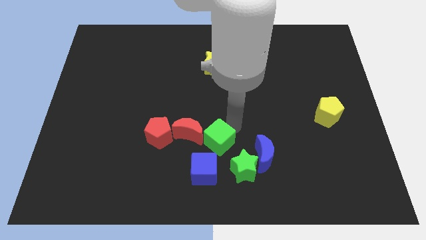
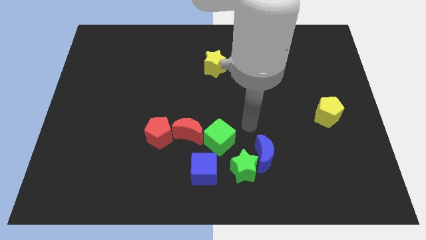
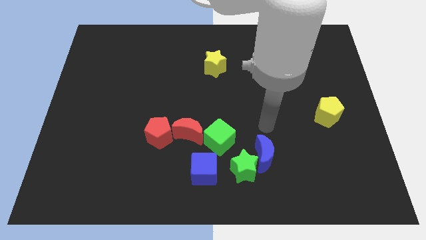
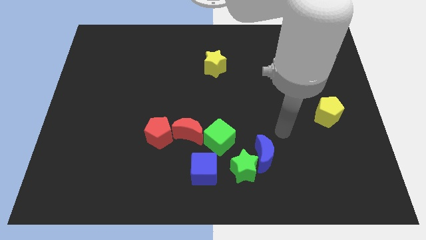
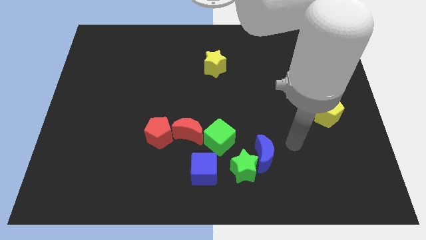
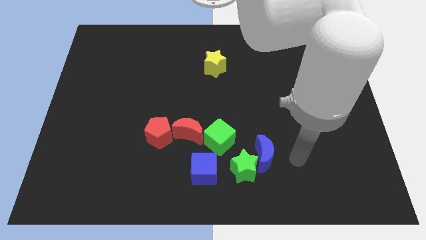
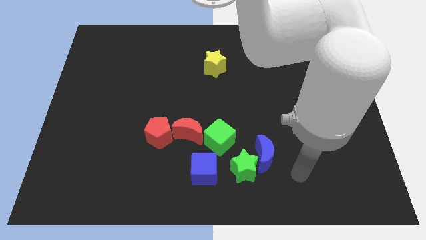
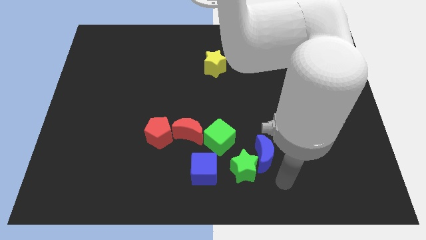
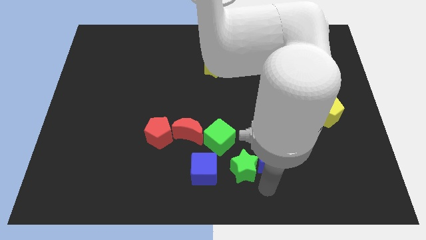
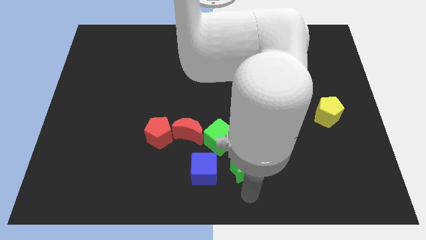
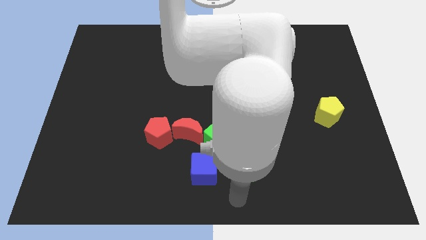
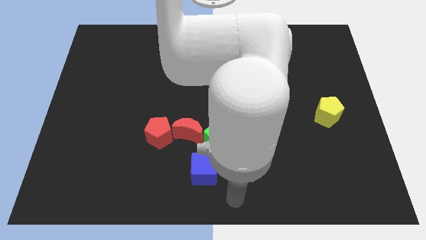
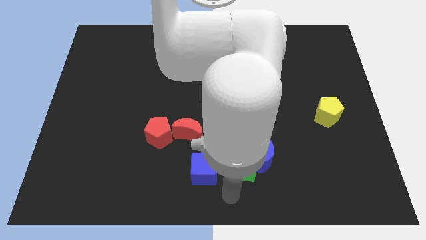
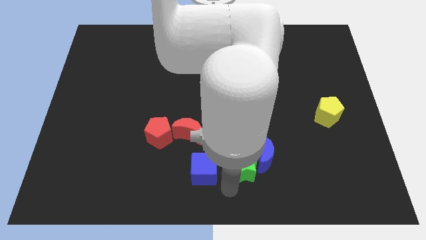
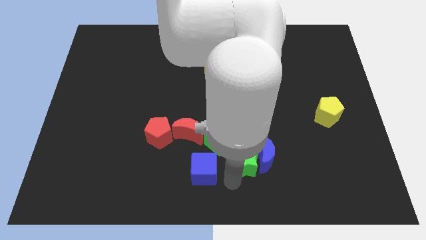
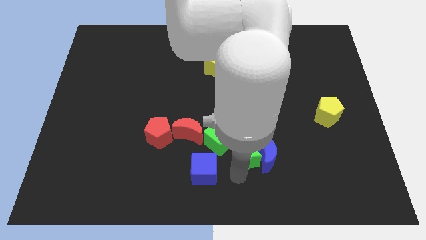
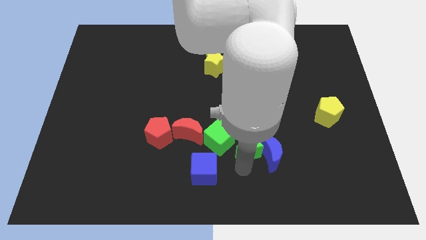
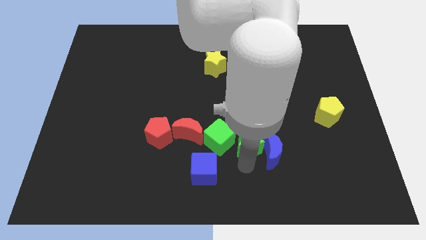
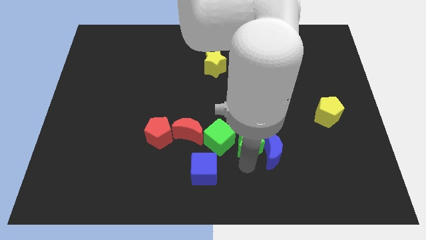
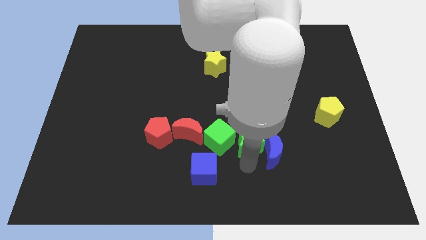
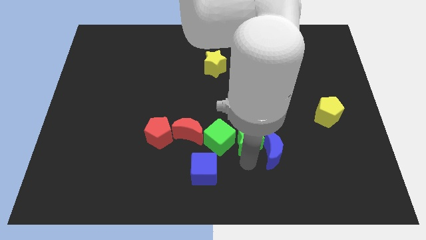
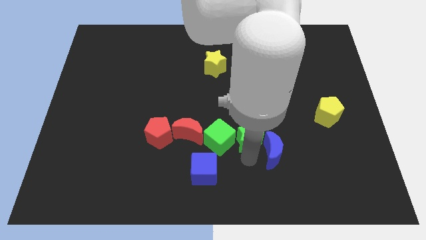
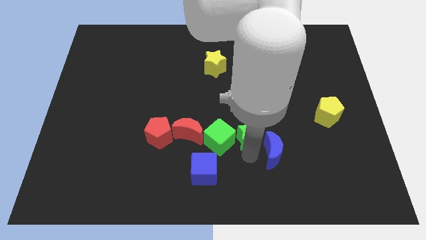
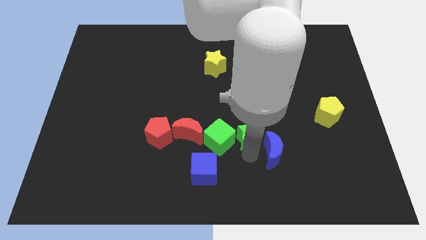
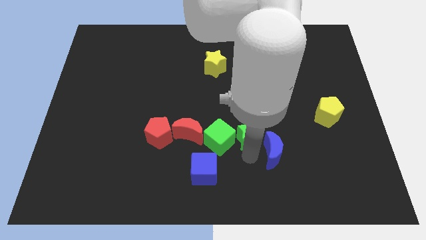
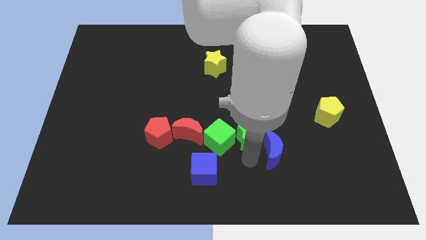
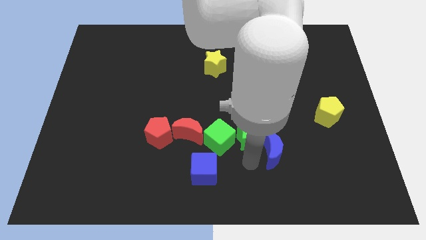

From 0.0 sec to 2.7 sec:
place the green star to the right of the green cube

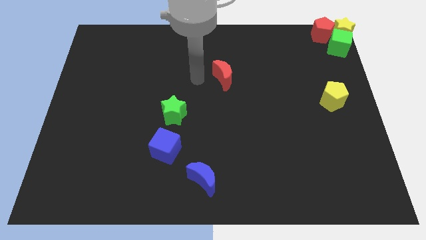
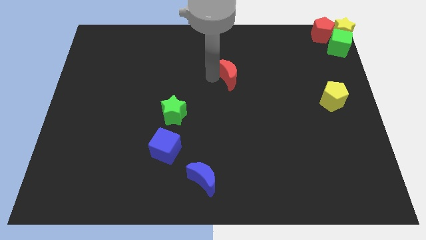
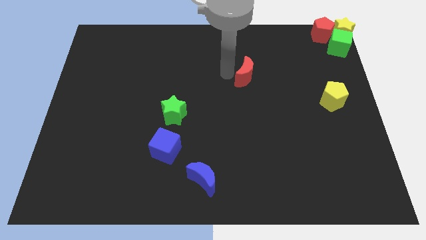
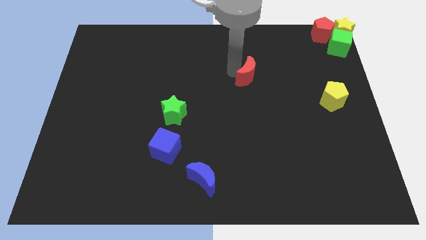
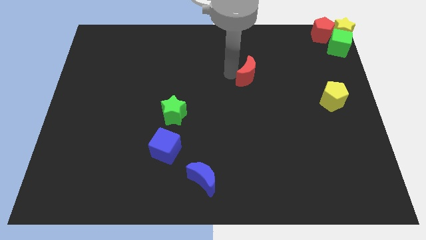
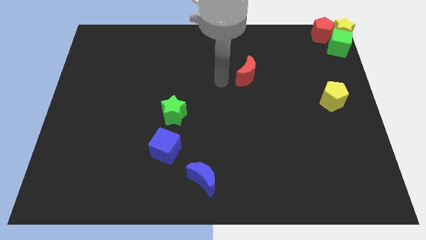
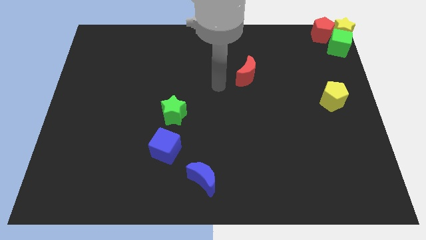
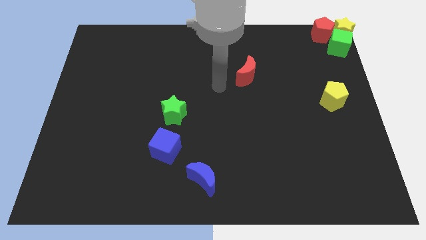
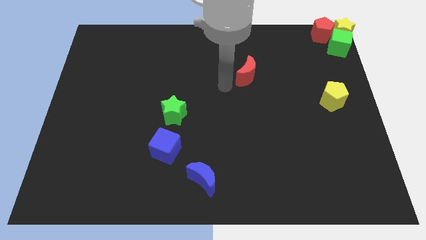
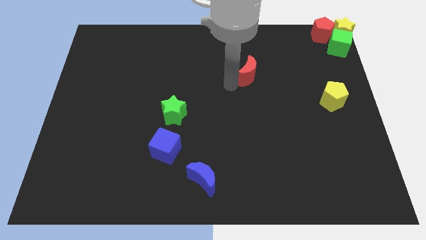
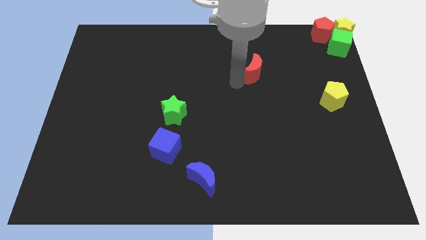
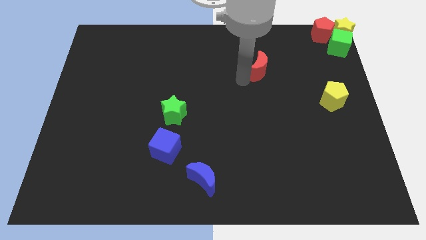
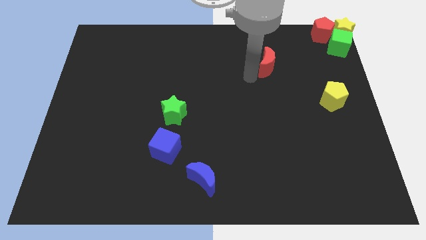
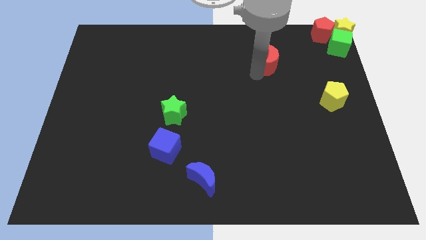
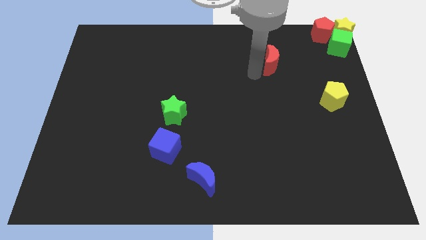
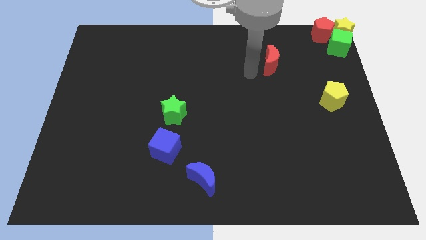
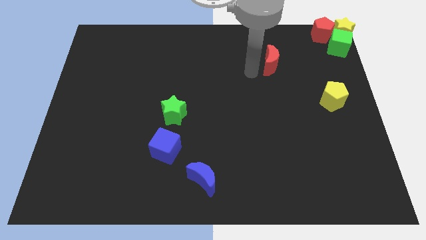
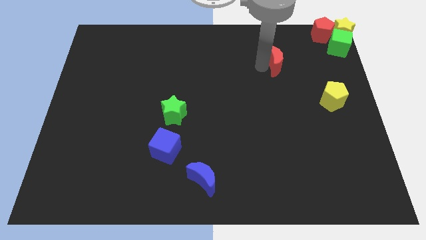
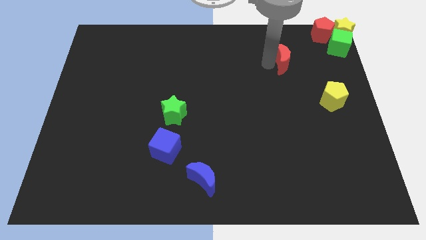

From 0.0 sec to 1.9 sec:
push the red moon to the right side of the board

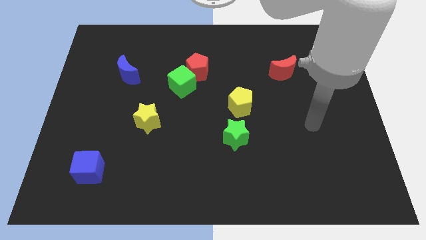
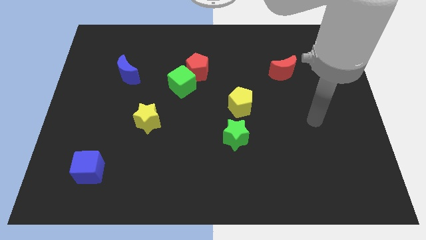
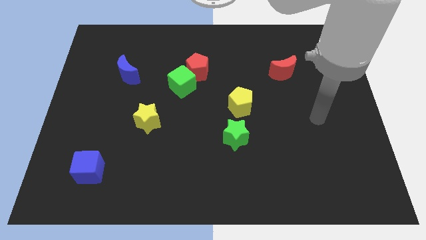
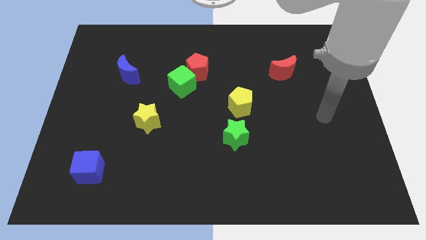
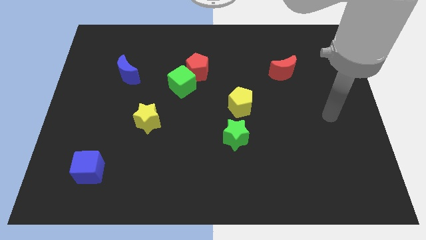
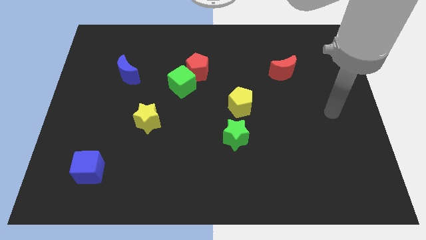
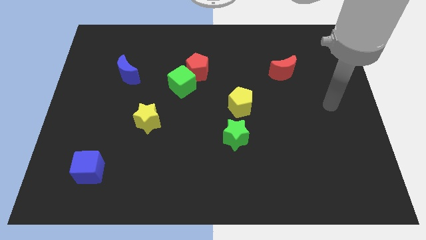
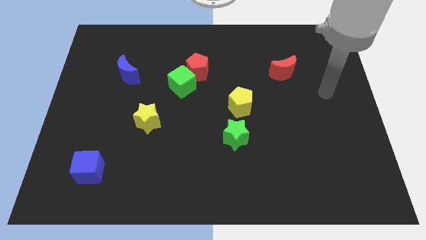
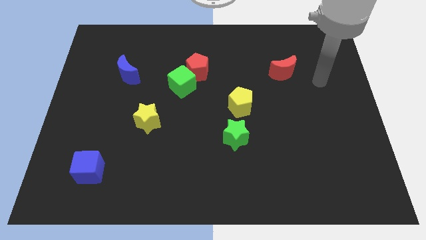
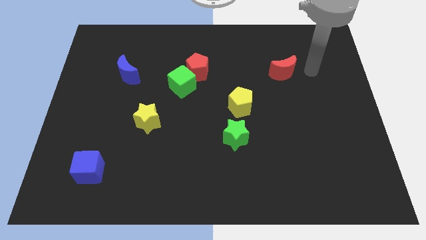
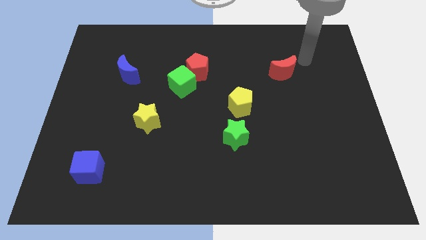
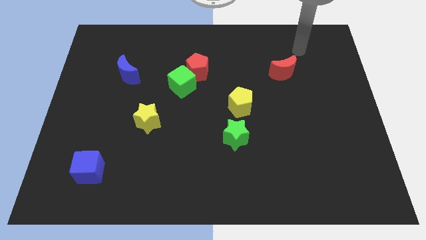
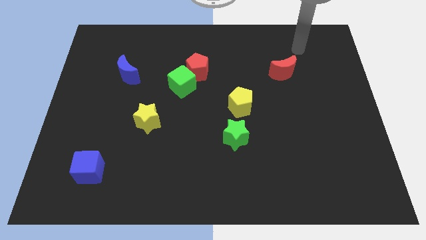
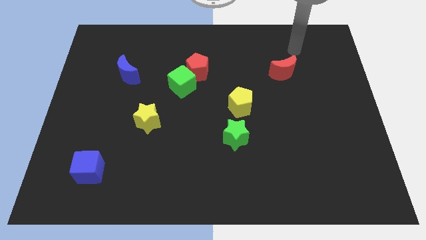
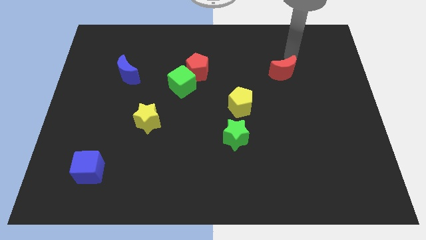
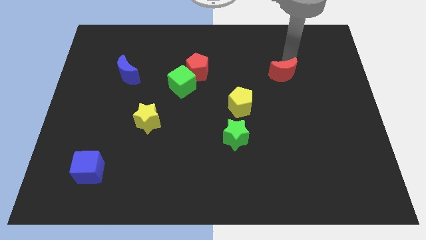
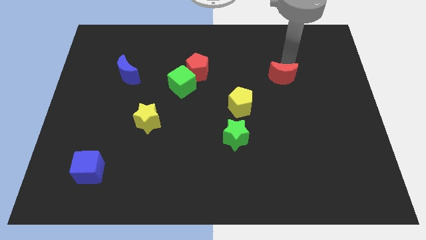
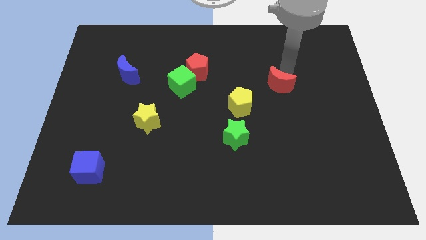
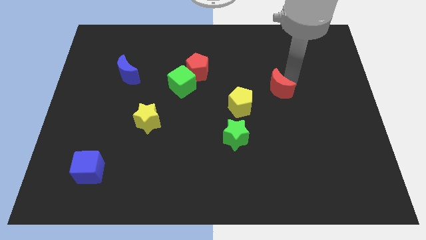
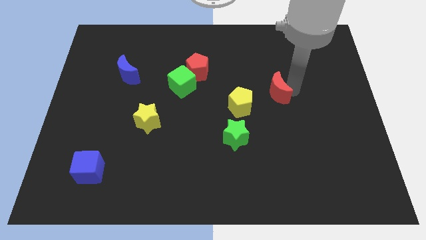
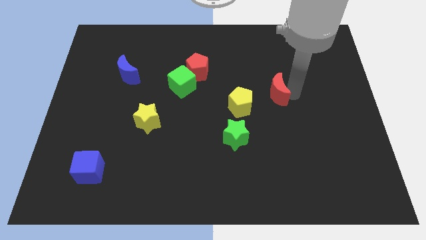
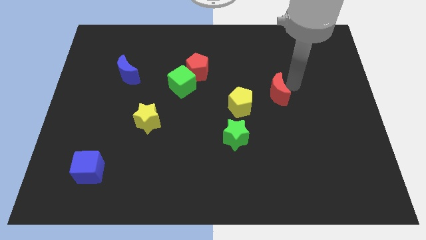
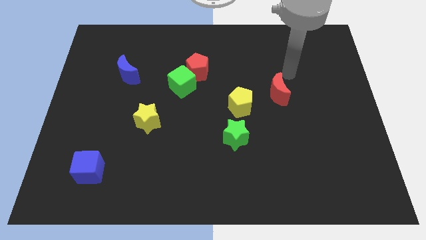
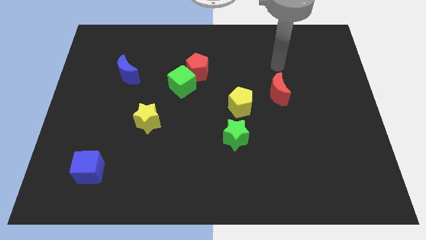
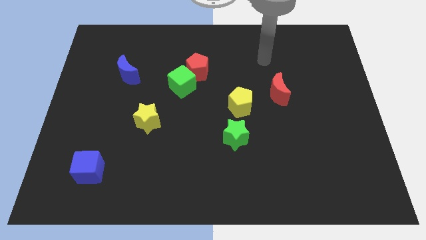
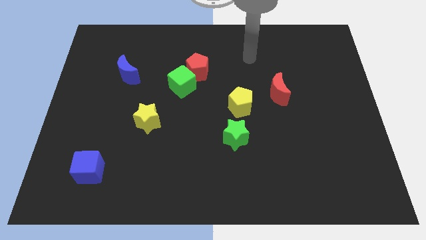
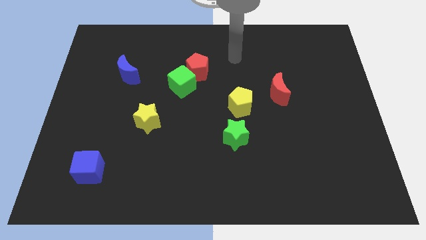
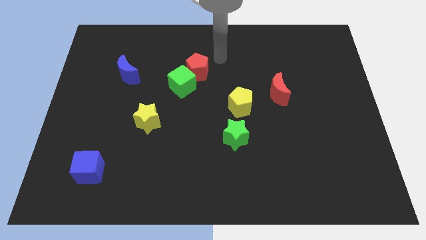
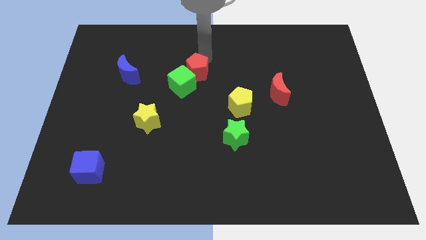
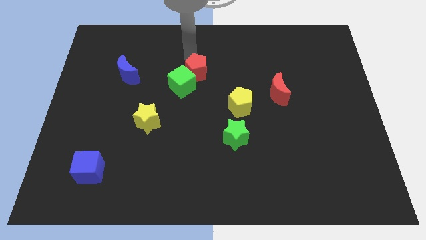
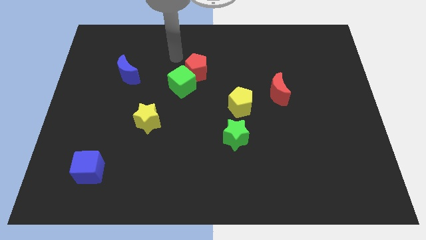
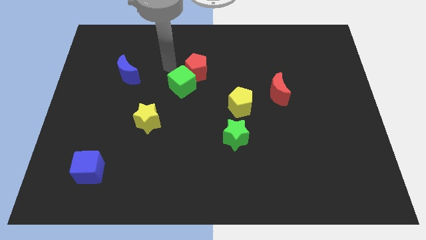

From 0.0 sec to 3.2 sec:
move the red crescent parallel to the right of the yellow pentagon

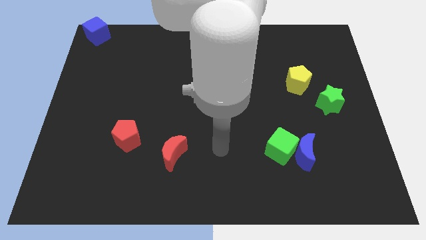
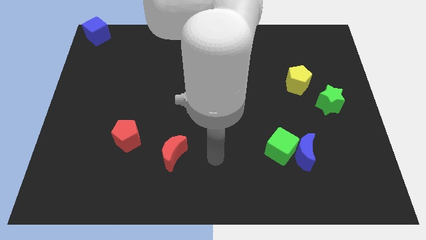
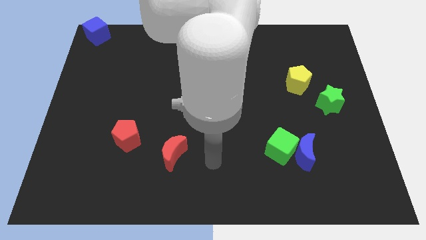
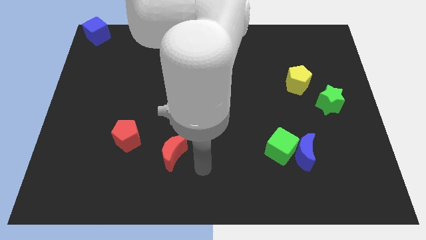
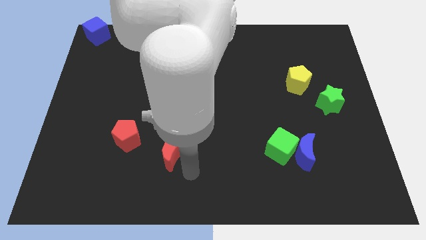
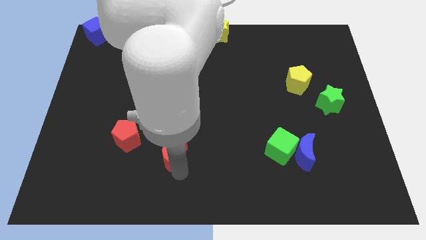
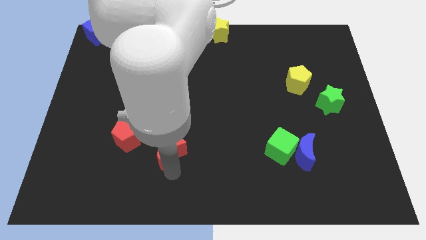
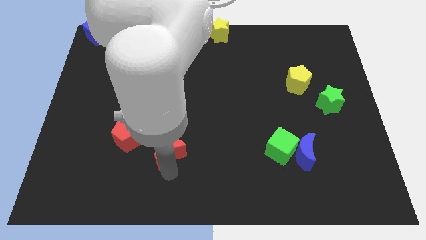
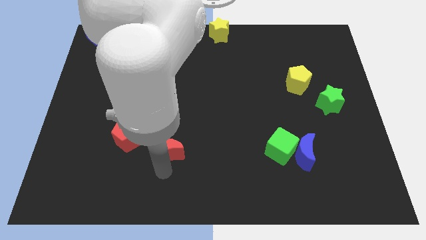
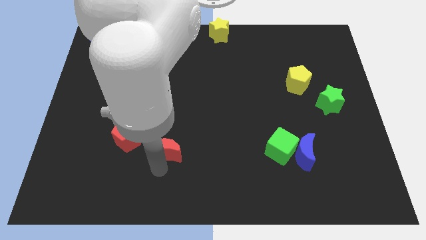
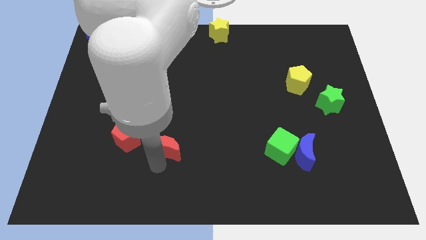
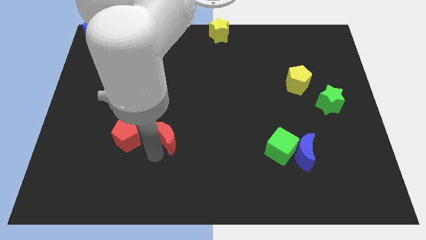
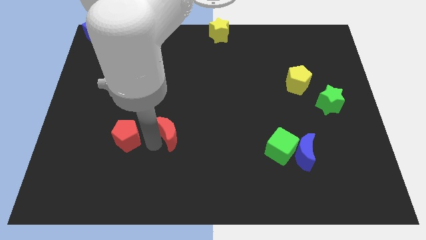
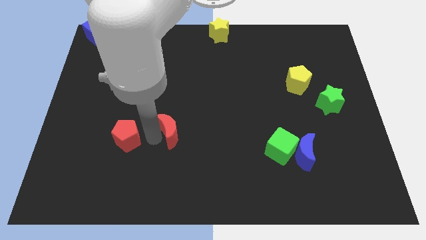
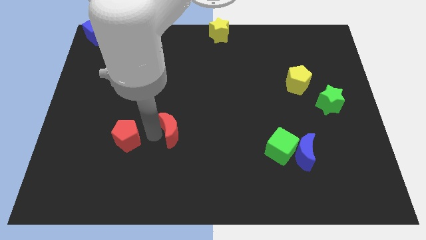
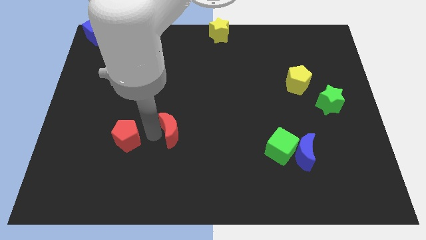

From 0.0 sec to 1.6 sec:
move red moon to the right of red pentagon
